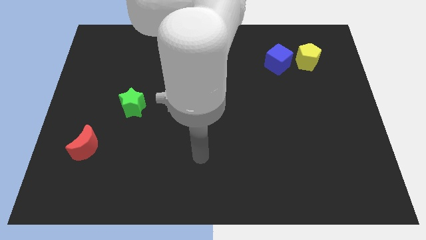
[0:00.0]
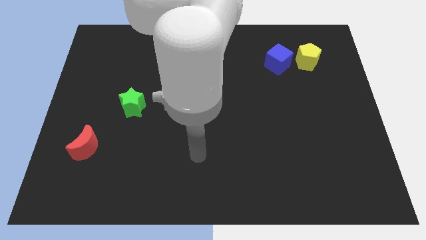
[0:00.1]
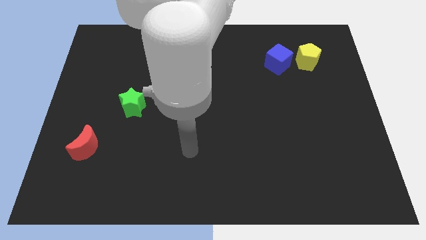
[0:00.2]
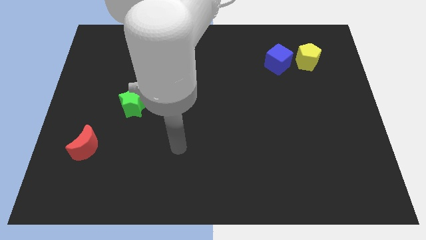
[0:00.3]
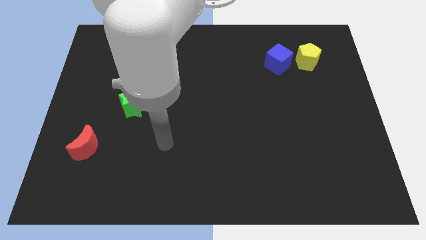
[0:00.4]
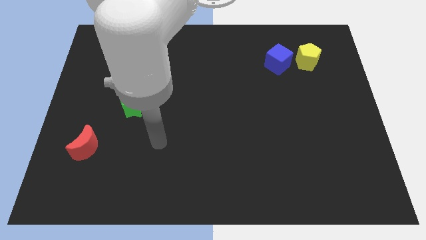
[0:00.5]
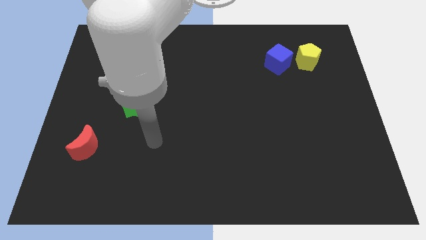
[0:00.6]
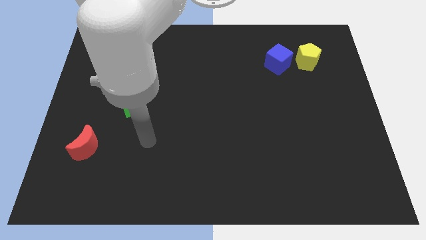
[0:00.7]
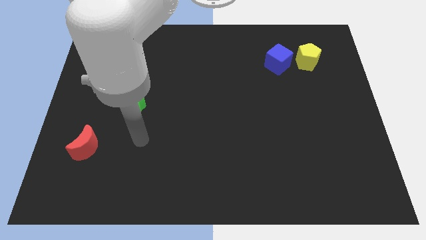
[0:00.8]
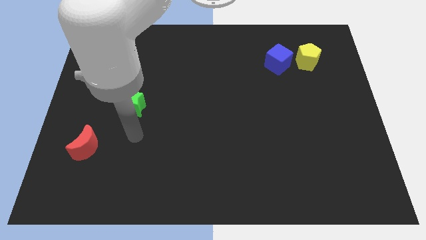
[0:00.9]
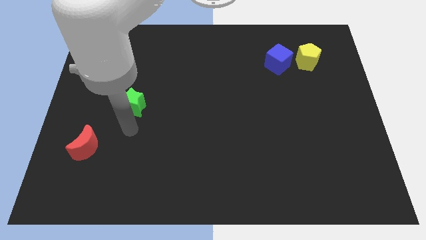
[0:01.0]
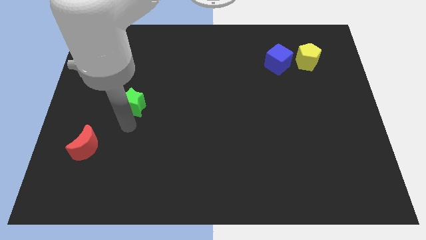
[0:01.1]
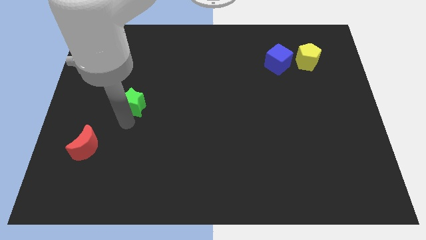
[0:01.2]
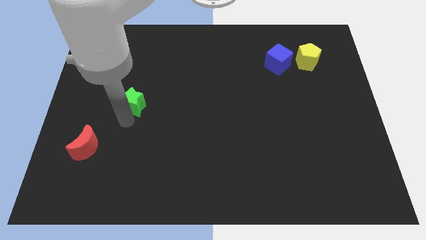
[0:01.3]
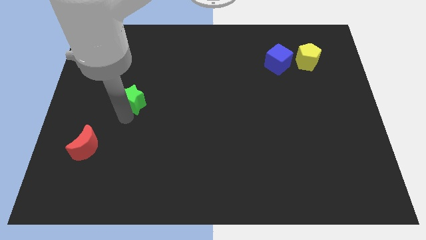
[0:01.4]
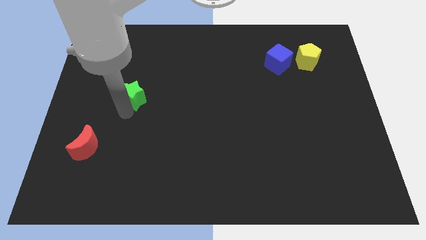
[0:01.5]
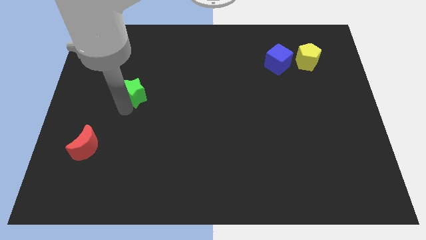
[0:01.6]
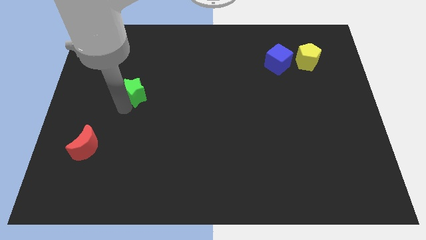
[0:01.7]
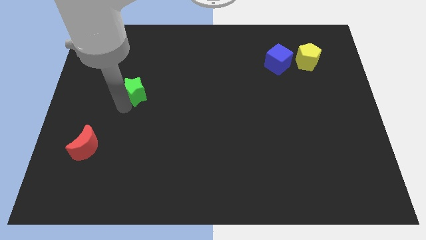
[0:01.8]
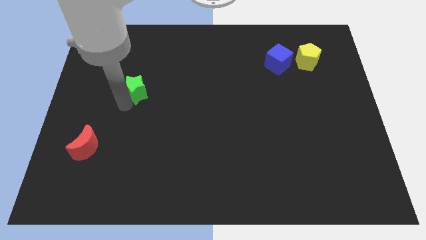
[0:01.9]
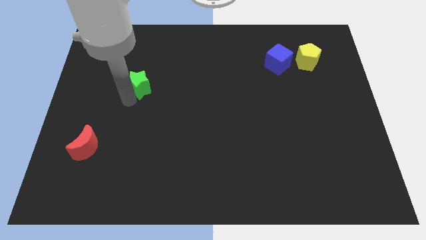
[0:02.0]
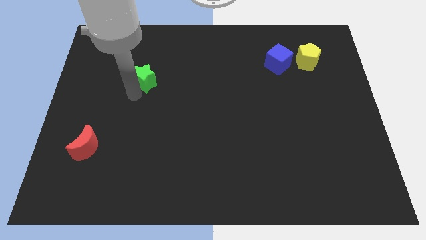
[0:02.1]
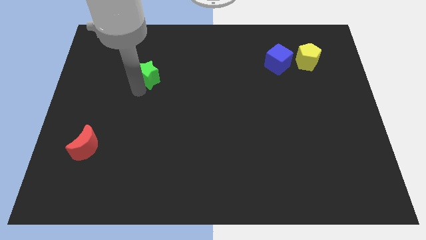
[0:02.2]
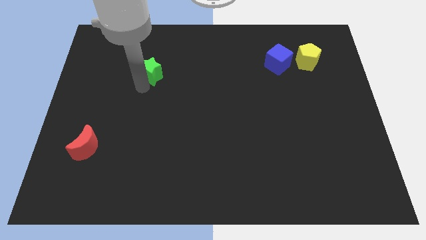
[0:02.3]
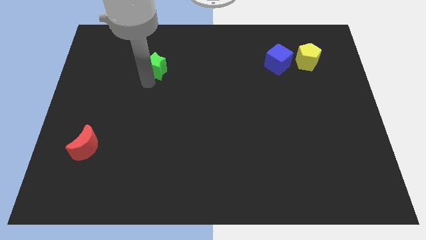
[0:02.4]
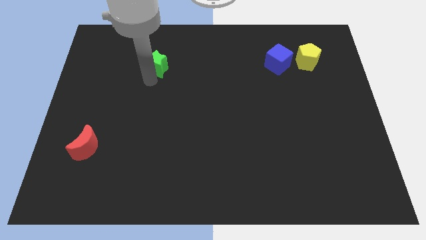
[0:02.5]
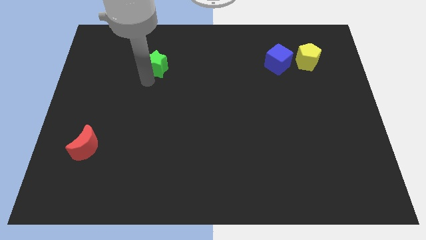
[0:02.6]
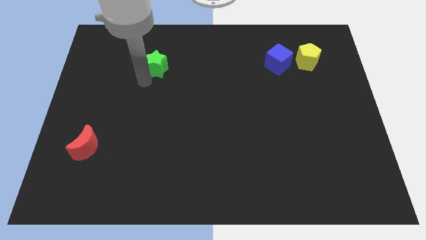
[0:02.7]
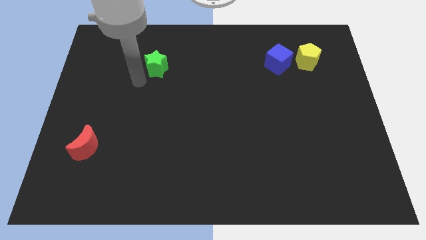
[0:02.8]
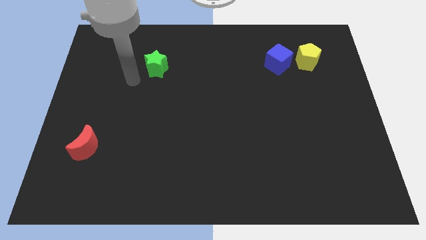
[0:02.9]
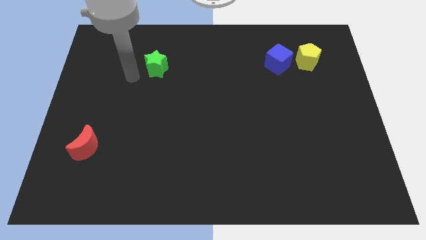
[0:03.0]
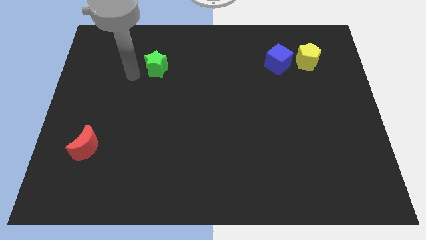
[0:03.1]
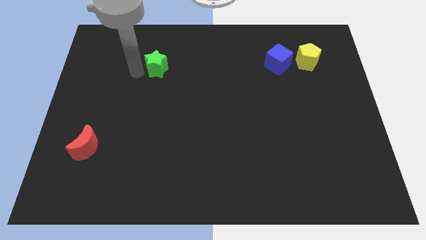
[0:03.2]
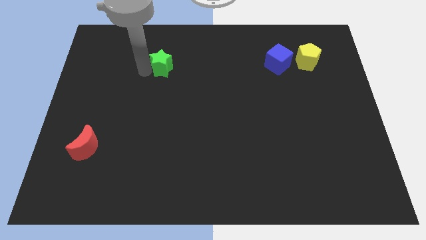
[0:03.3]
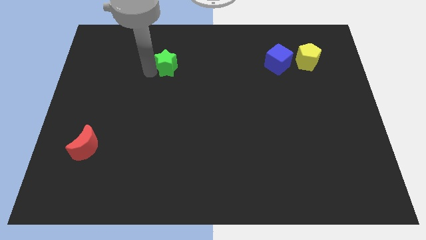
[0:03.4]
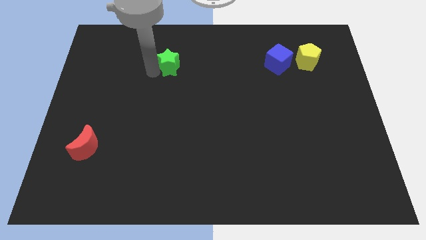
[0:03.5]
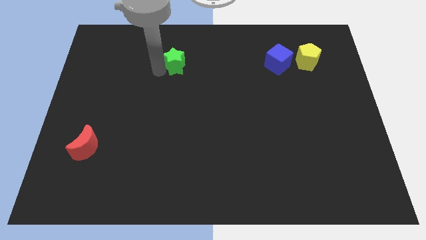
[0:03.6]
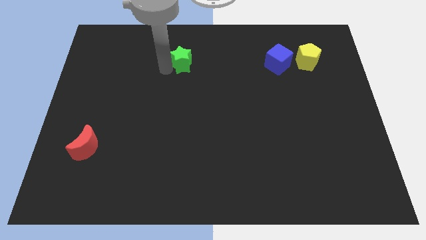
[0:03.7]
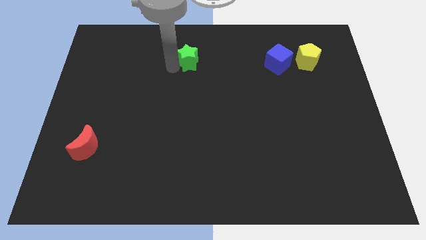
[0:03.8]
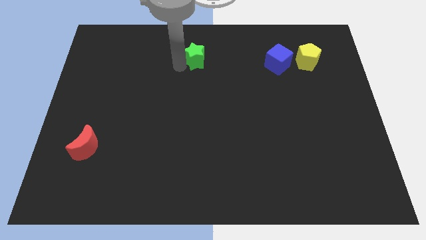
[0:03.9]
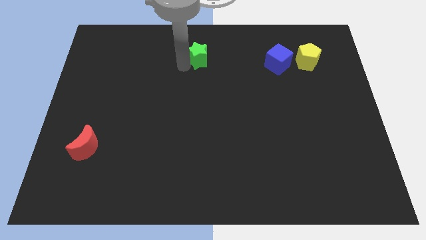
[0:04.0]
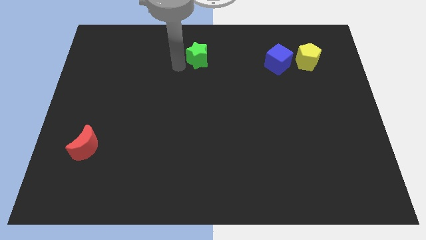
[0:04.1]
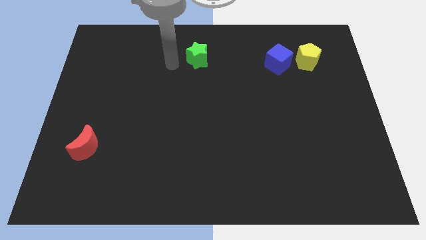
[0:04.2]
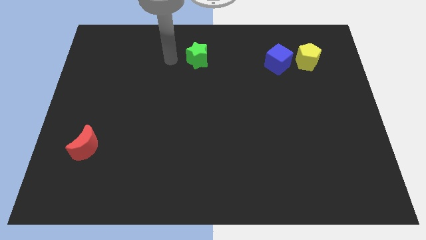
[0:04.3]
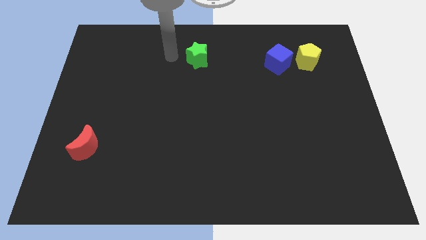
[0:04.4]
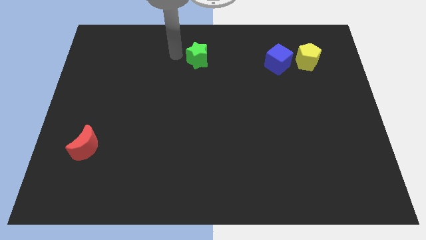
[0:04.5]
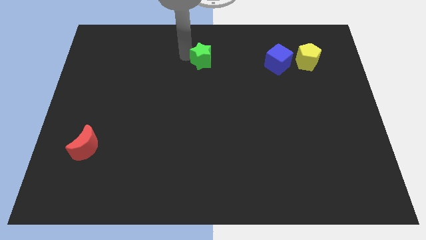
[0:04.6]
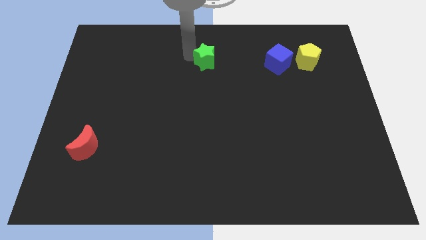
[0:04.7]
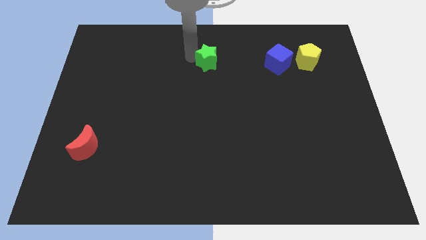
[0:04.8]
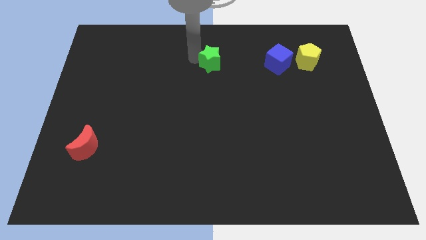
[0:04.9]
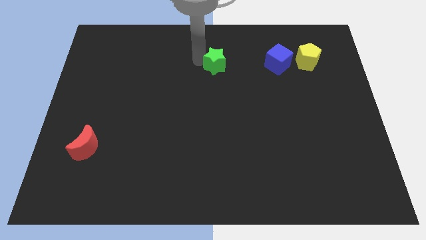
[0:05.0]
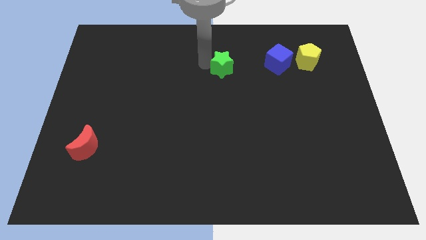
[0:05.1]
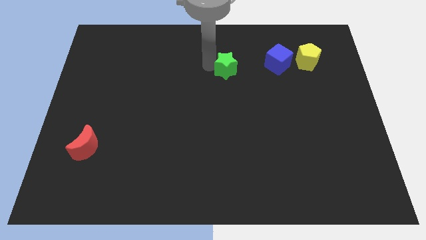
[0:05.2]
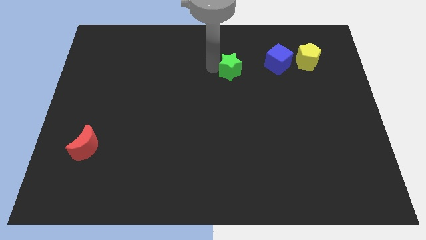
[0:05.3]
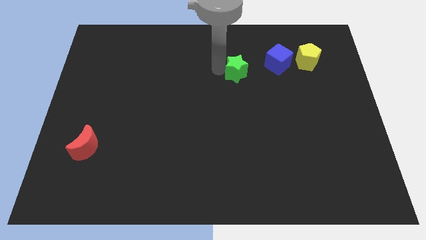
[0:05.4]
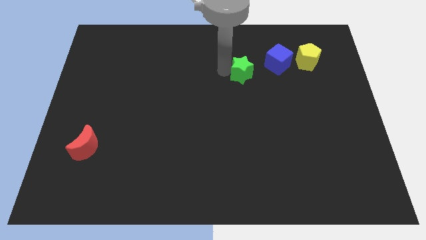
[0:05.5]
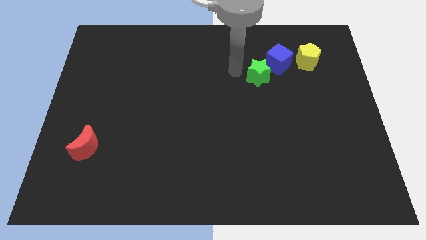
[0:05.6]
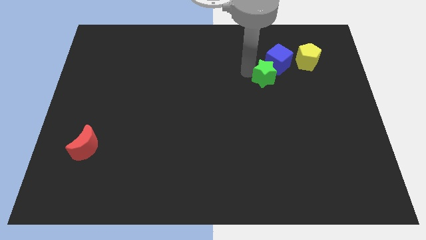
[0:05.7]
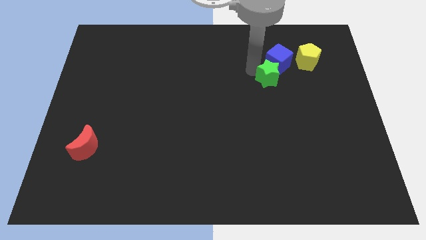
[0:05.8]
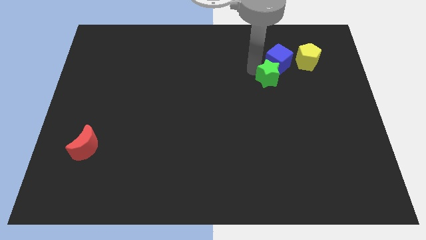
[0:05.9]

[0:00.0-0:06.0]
slide the star to the blue cube

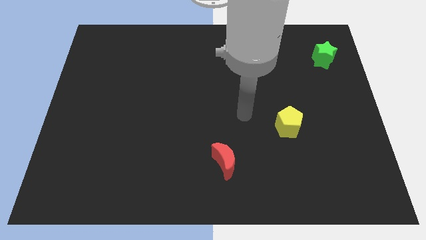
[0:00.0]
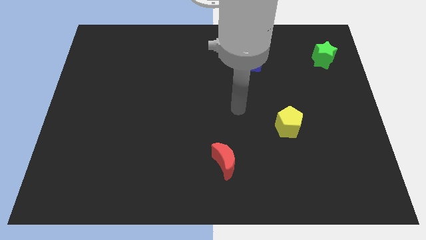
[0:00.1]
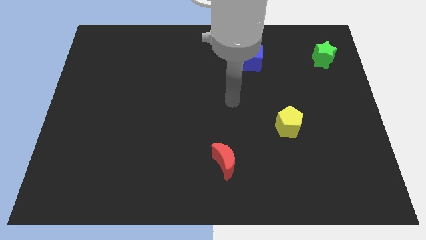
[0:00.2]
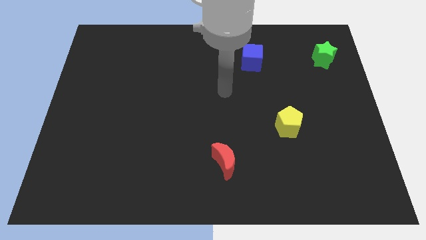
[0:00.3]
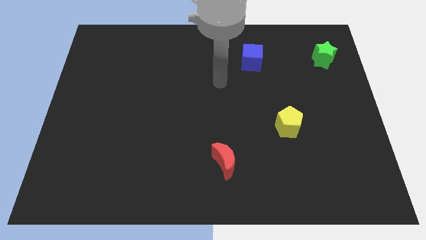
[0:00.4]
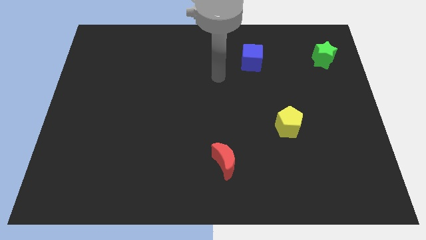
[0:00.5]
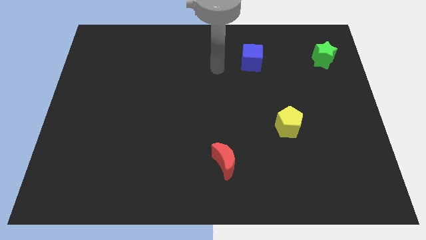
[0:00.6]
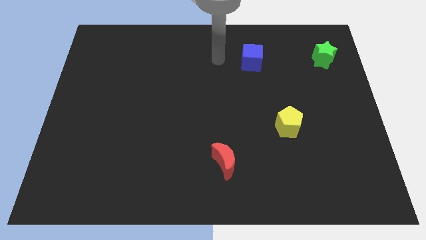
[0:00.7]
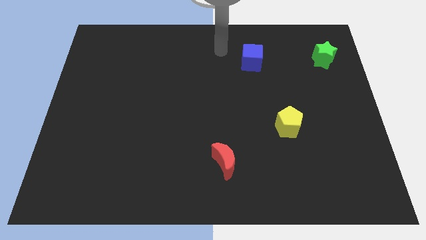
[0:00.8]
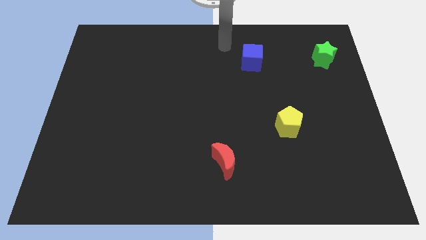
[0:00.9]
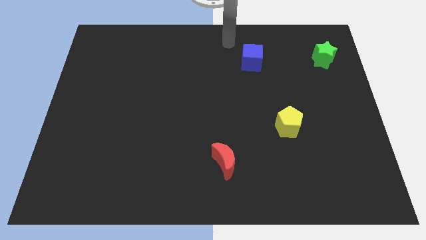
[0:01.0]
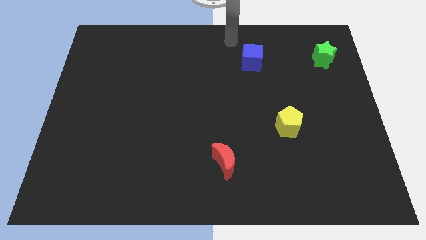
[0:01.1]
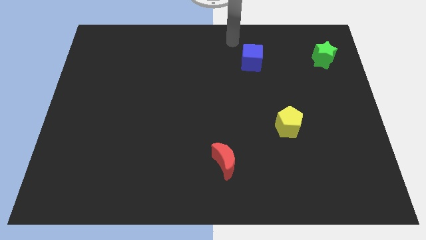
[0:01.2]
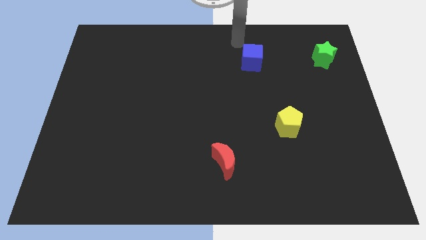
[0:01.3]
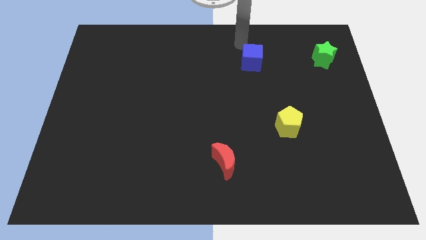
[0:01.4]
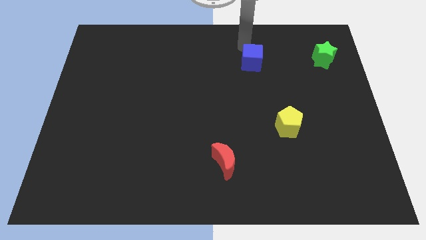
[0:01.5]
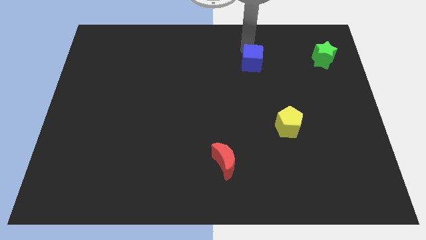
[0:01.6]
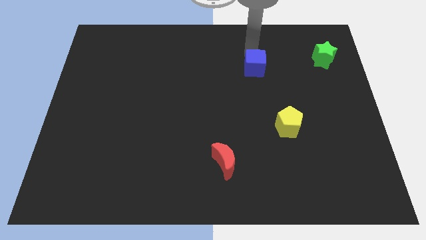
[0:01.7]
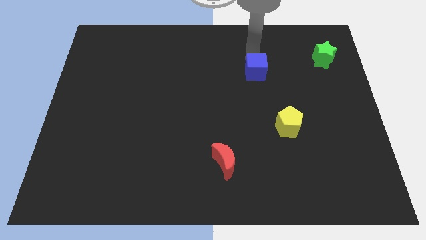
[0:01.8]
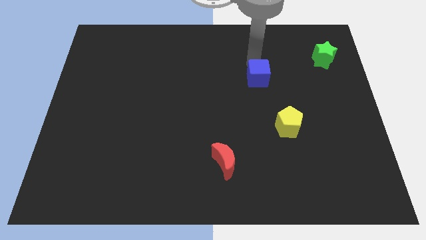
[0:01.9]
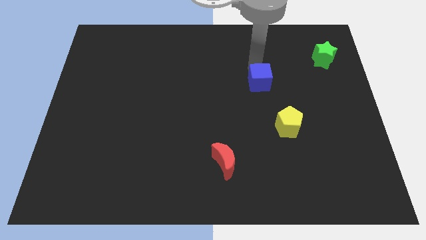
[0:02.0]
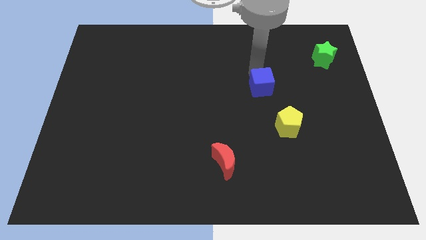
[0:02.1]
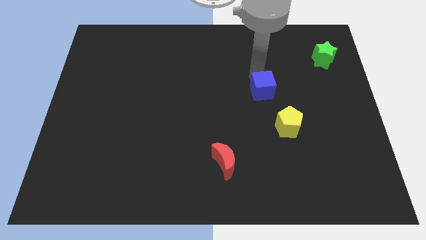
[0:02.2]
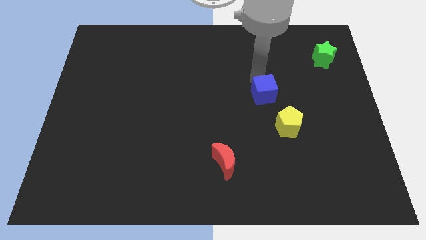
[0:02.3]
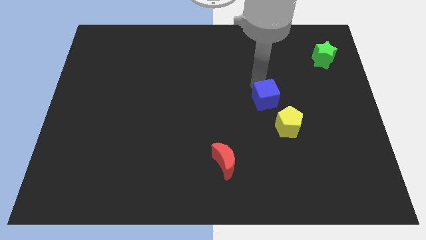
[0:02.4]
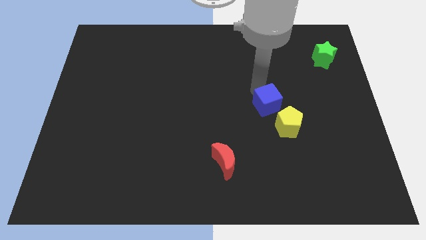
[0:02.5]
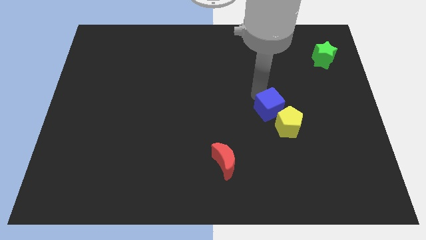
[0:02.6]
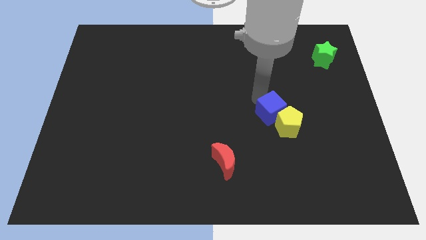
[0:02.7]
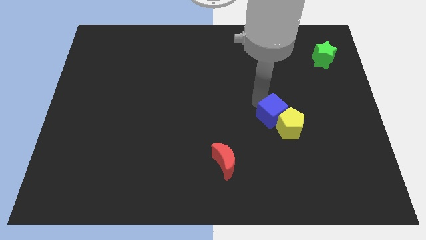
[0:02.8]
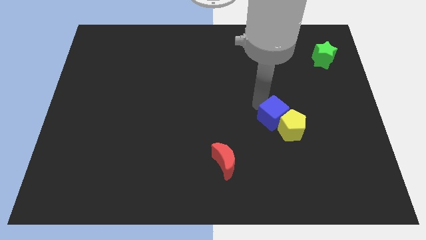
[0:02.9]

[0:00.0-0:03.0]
slide the blue cube towards the yellow pentagon
